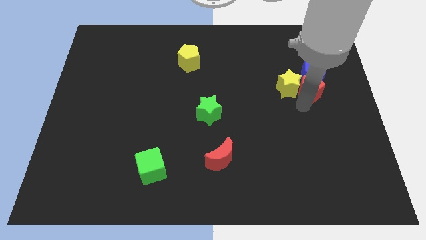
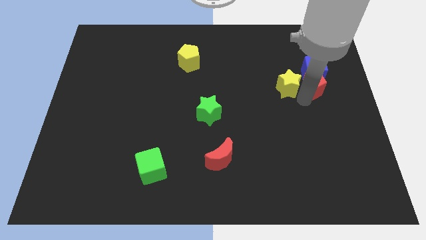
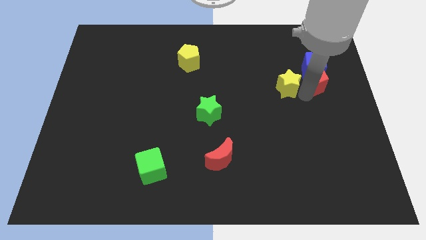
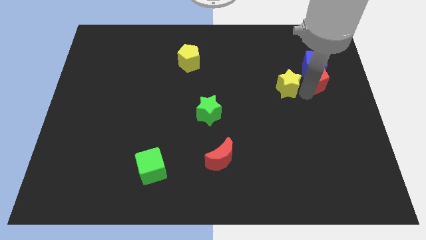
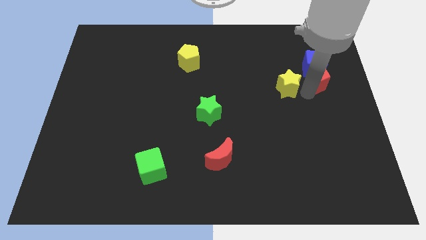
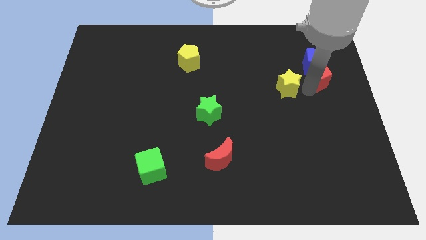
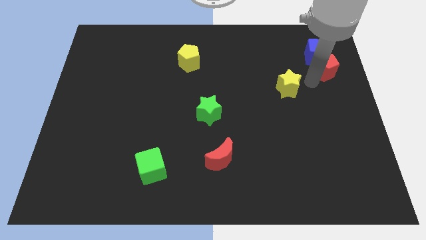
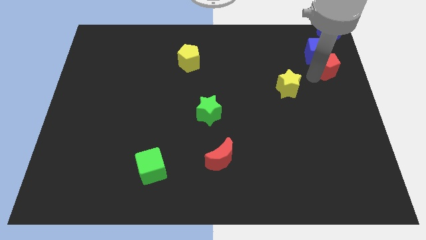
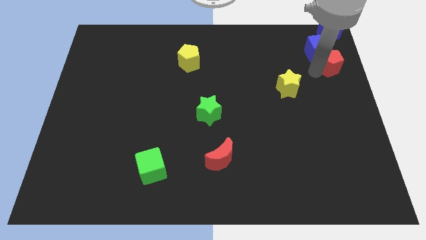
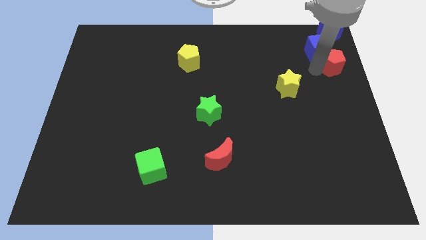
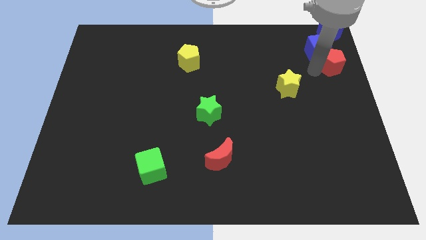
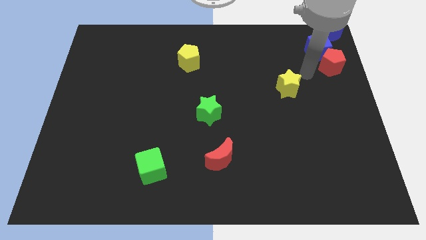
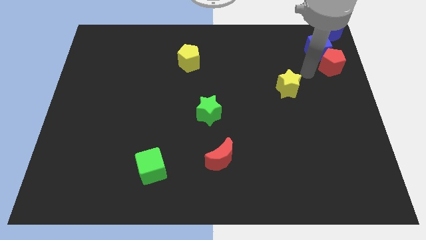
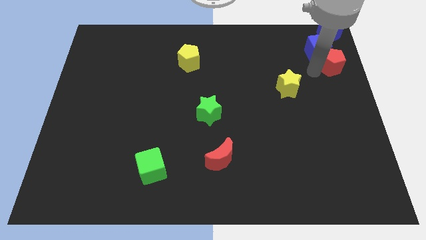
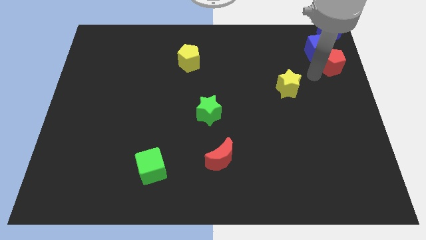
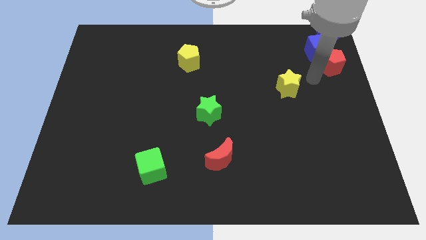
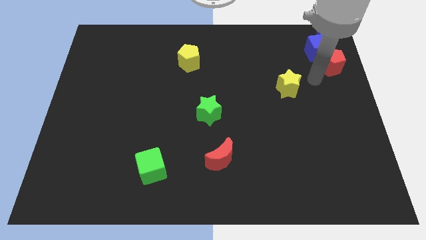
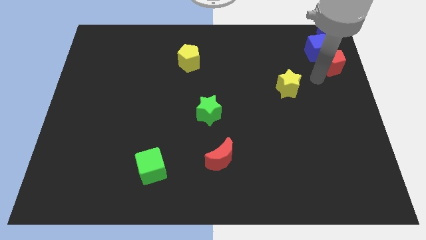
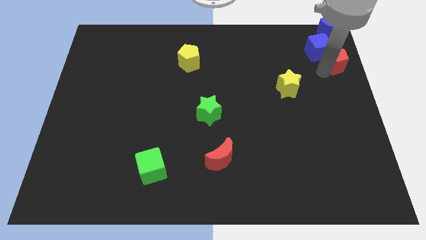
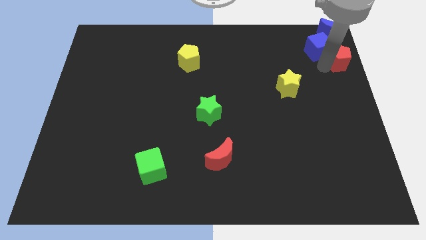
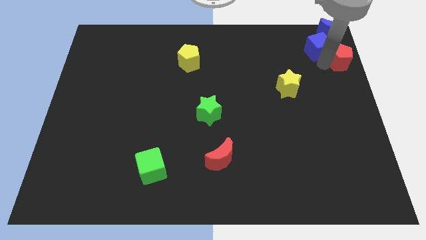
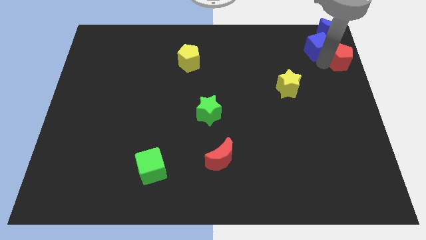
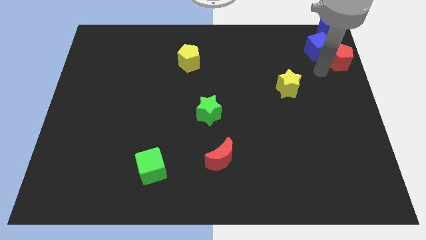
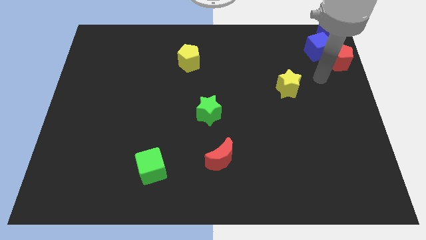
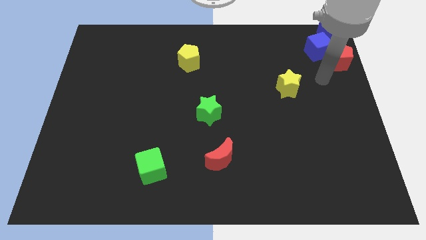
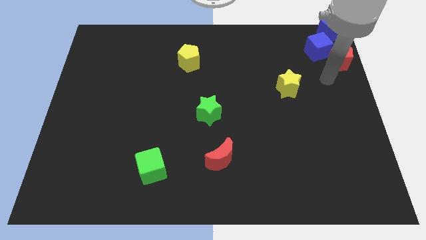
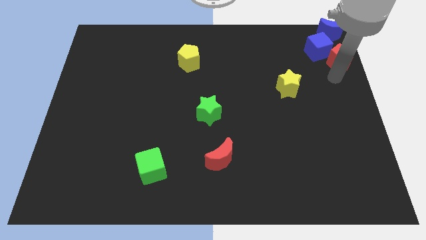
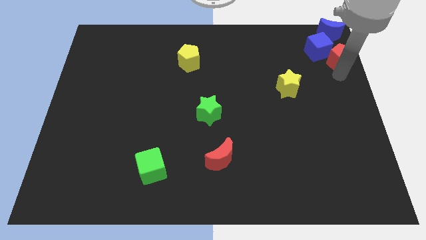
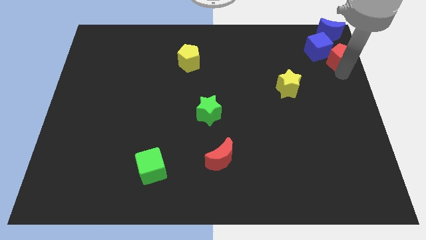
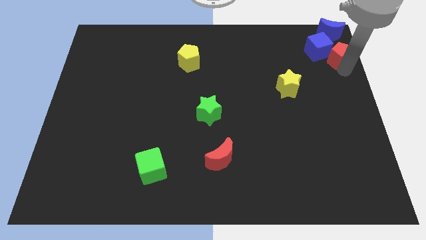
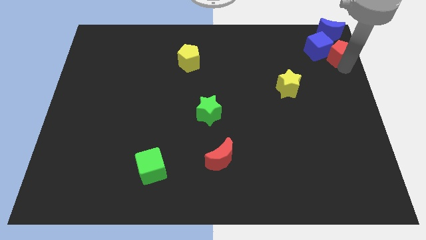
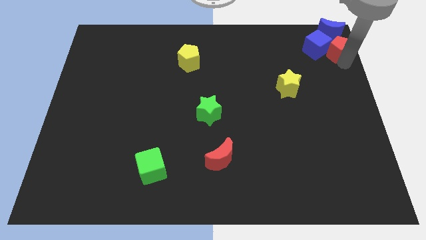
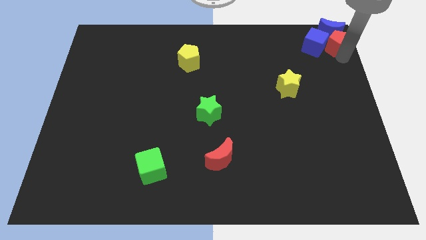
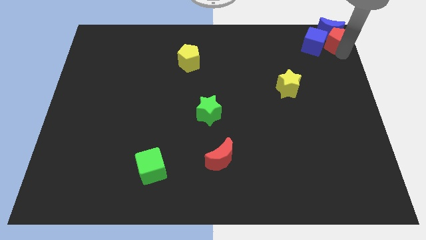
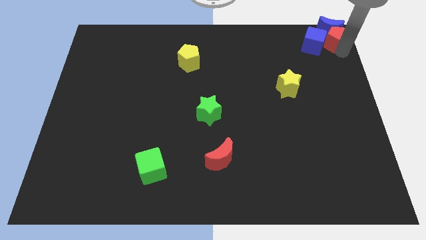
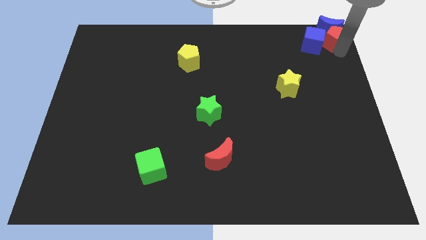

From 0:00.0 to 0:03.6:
move the red pentagon along with blue cube to the top right corner

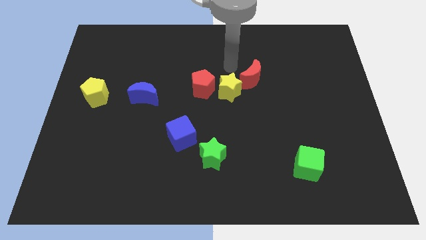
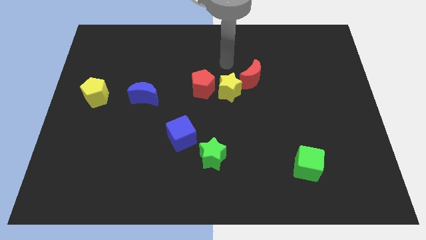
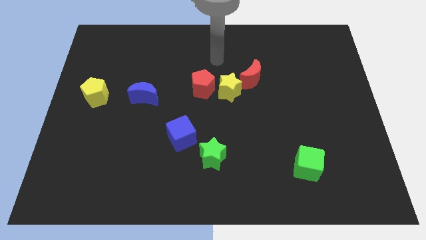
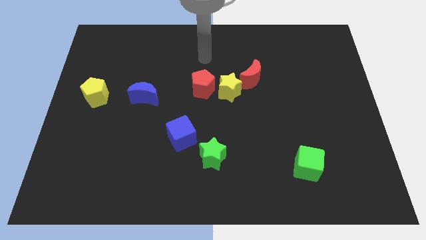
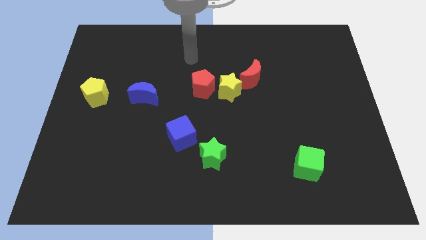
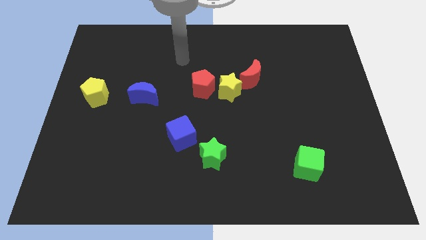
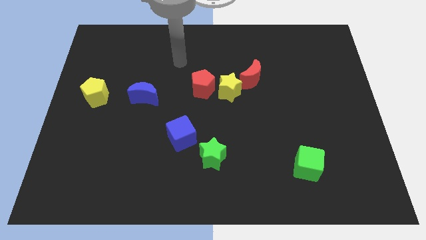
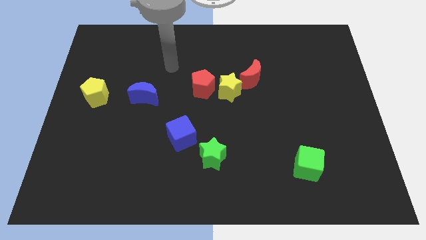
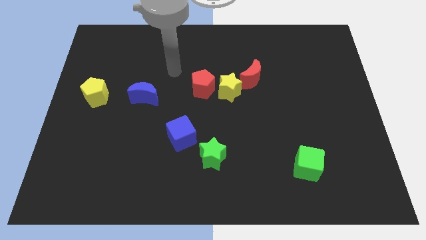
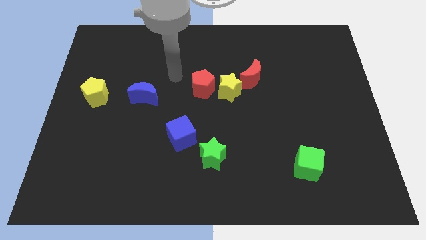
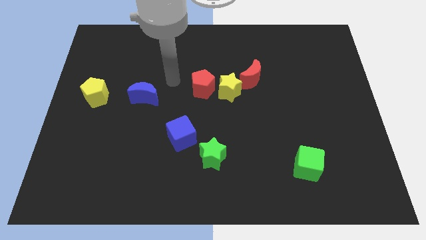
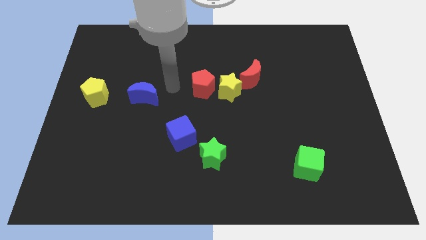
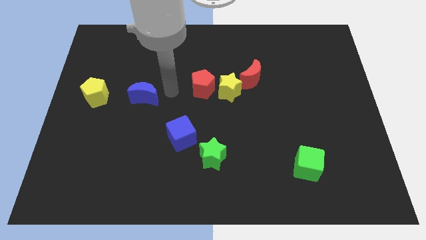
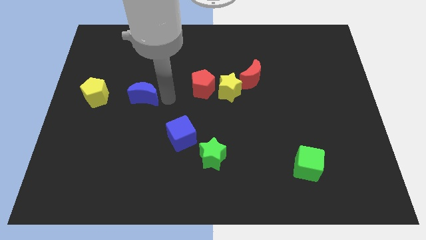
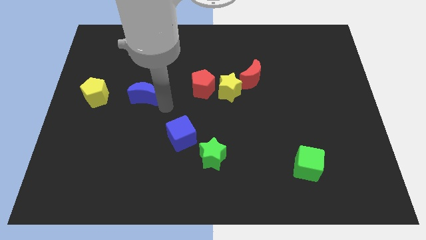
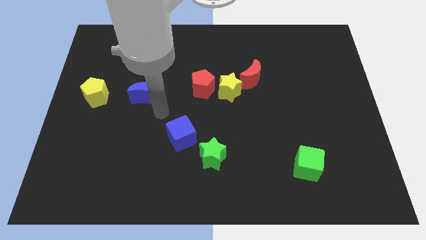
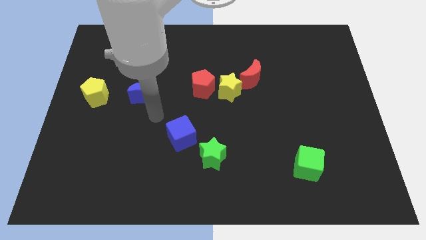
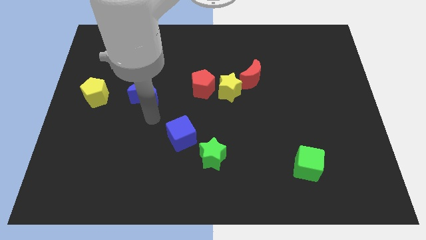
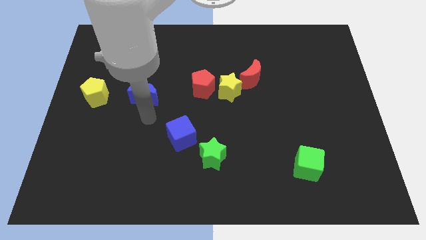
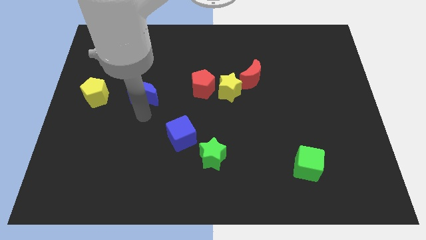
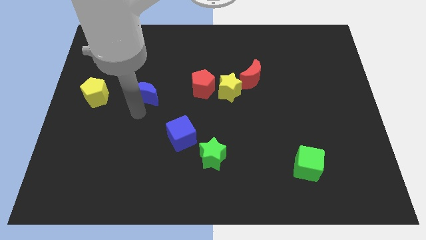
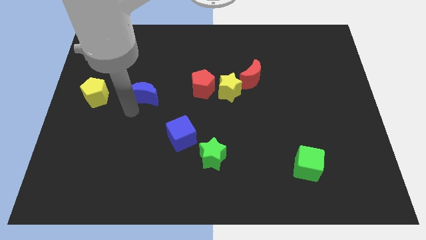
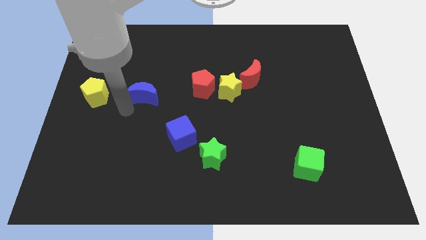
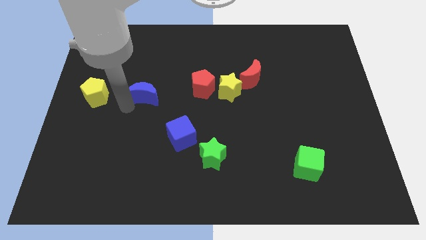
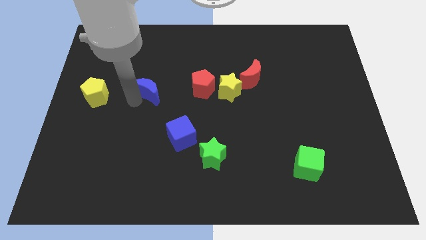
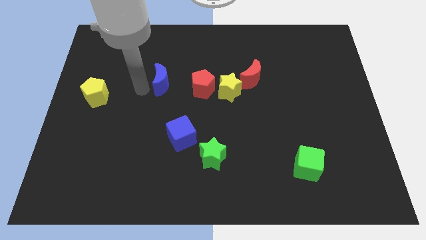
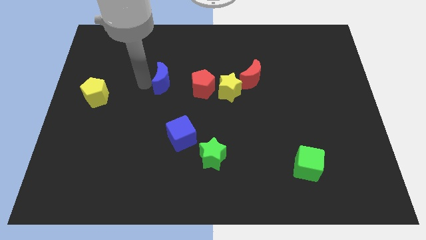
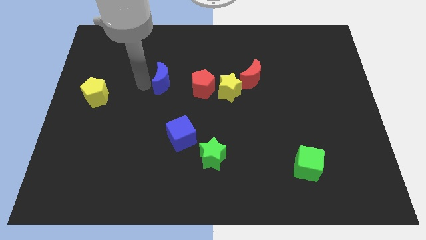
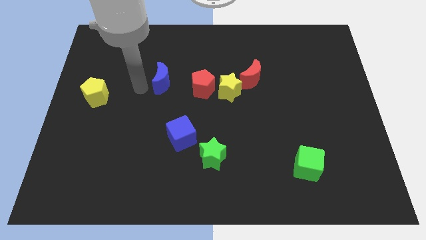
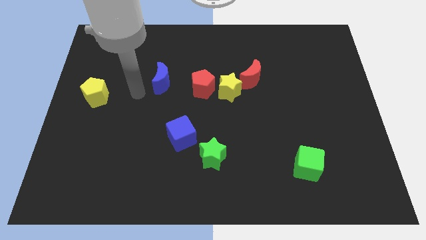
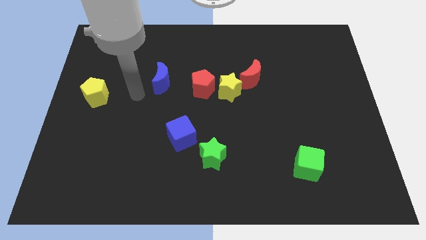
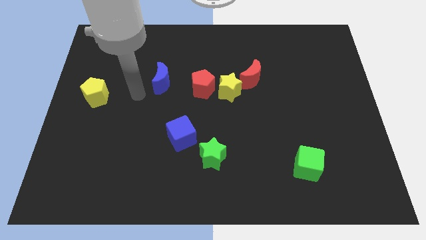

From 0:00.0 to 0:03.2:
move blue crescent to the left of red pentagon

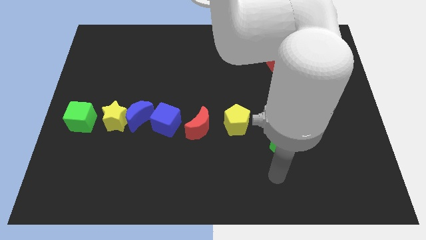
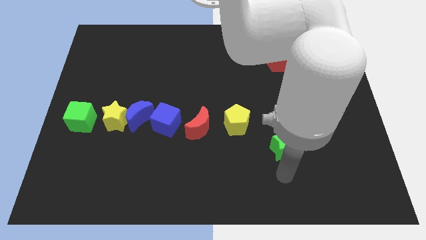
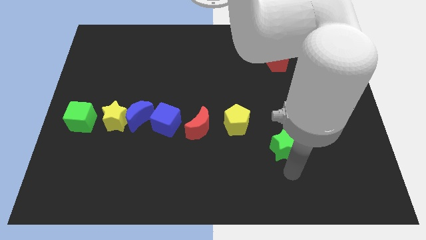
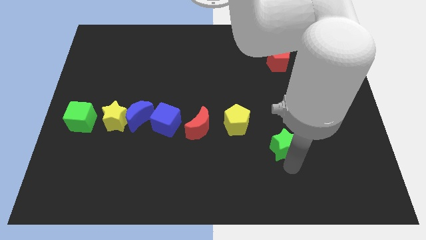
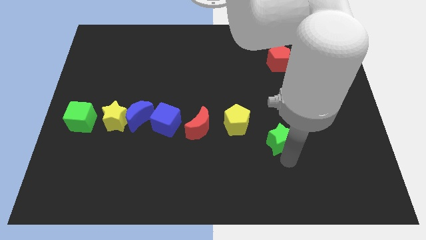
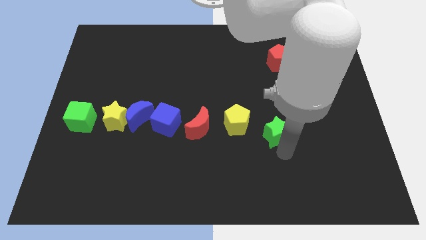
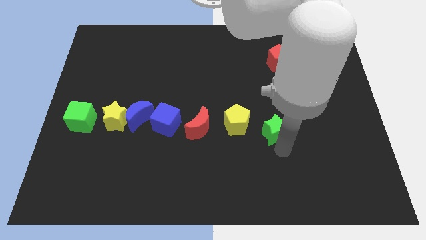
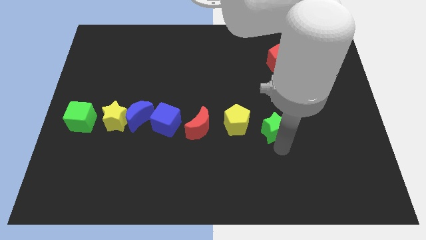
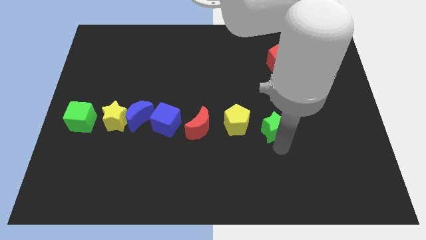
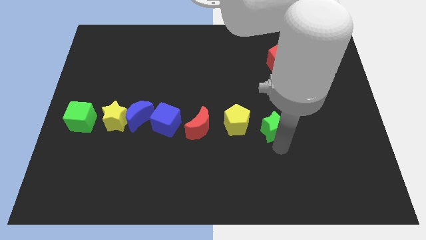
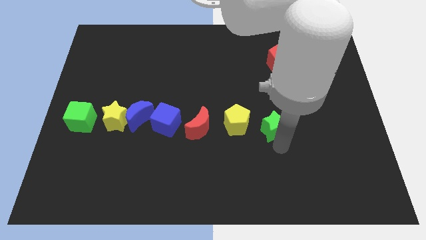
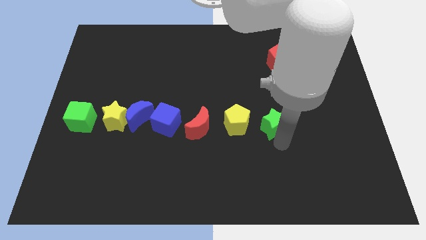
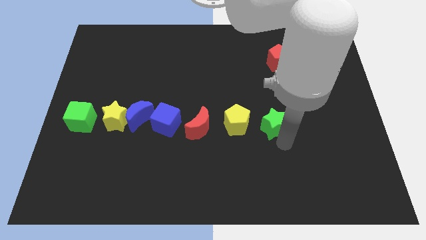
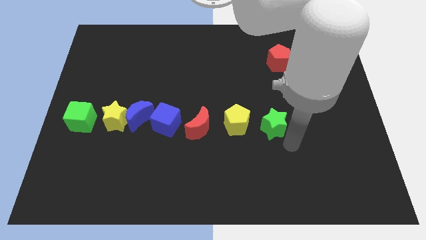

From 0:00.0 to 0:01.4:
push green star beside yellow pentagon

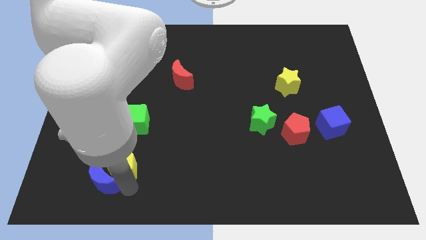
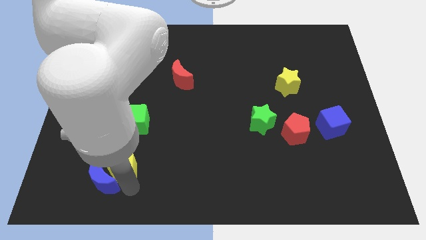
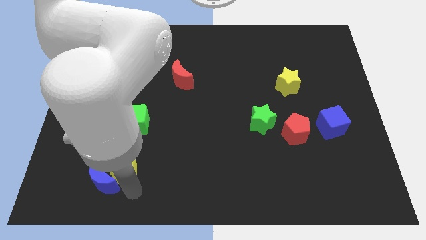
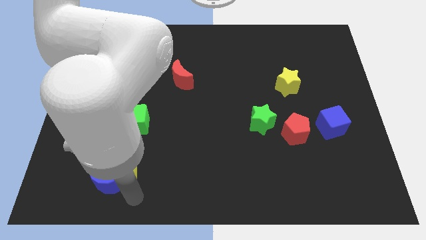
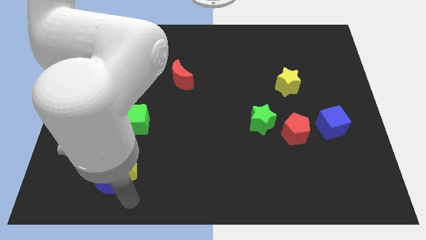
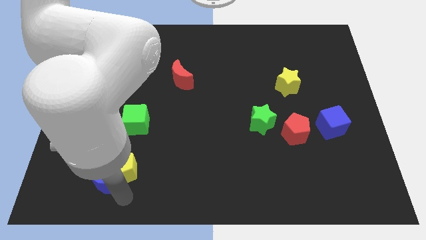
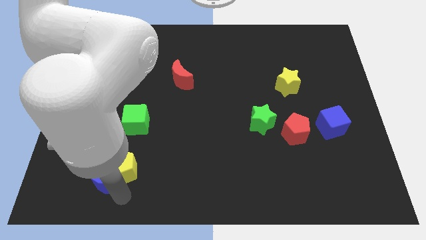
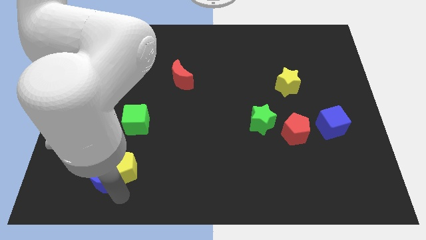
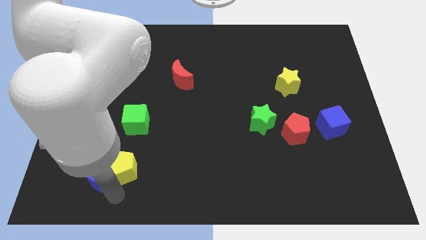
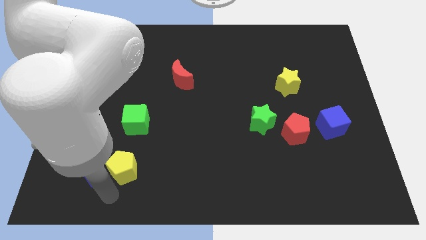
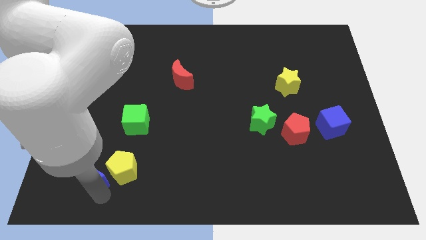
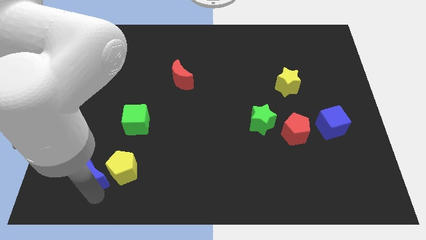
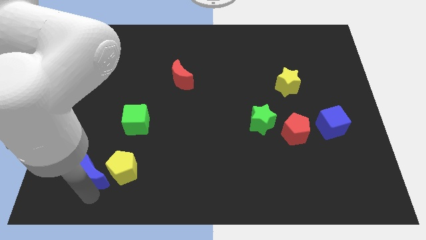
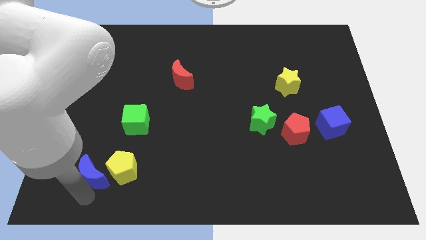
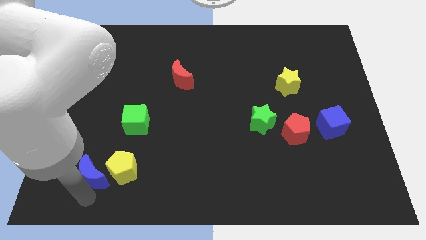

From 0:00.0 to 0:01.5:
push the blue moon to the left of the yellow pentagon
